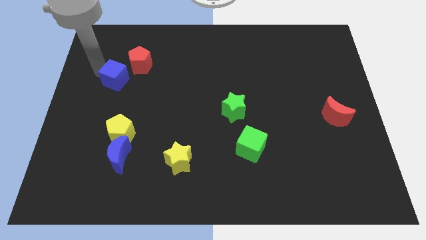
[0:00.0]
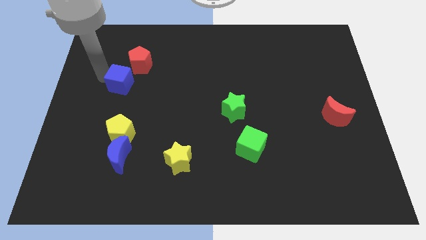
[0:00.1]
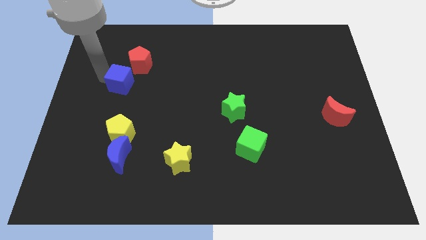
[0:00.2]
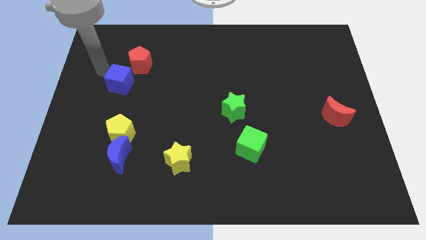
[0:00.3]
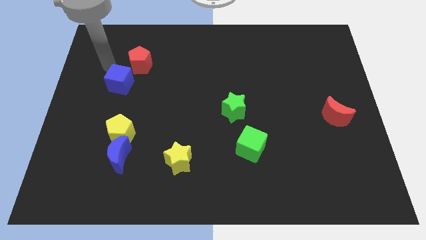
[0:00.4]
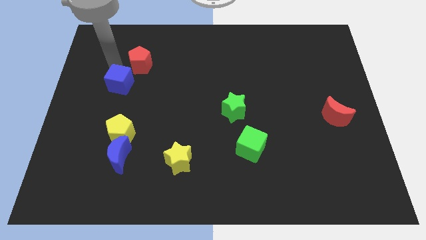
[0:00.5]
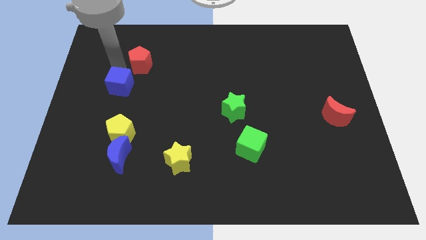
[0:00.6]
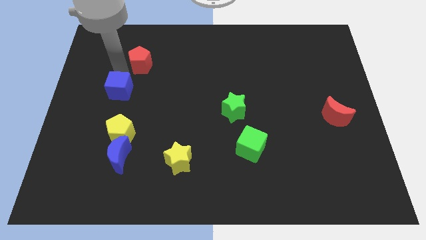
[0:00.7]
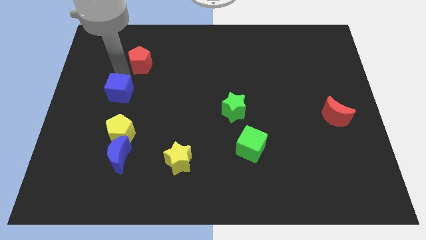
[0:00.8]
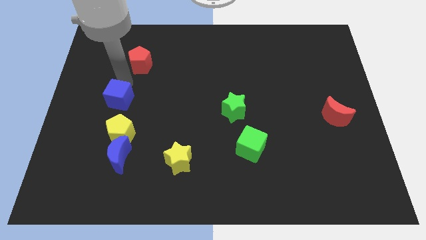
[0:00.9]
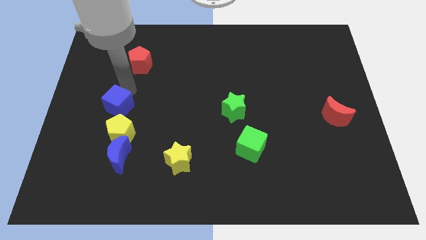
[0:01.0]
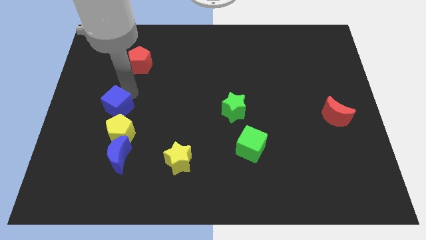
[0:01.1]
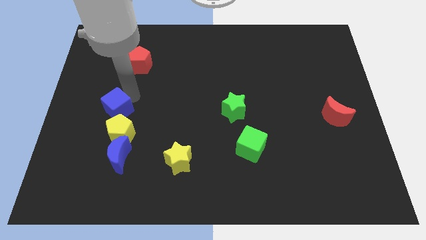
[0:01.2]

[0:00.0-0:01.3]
move the blue cube into the yellow pentagon

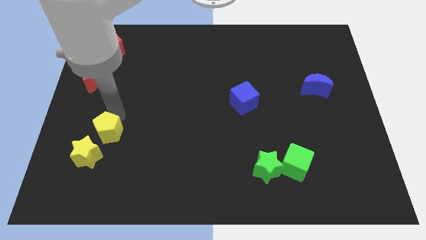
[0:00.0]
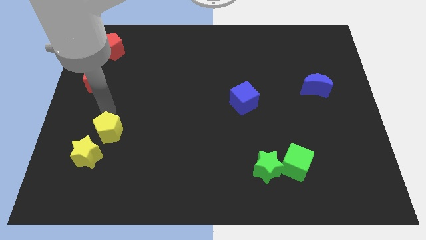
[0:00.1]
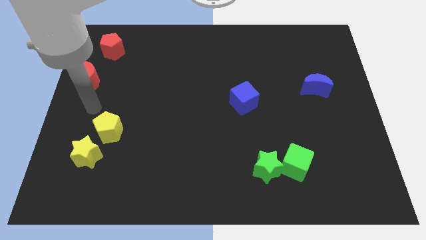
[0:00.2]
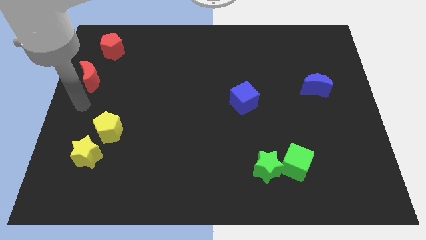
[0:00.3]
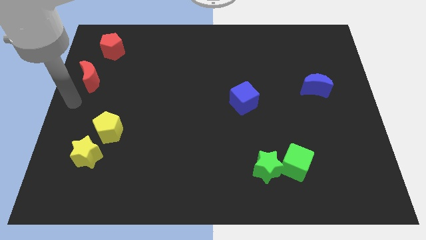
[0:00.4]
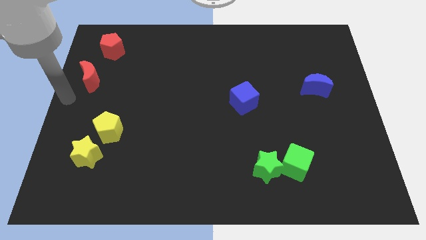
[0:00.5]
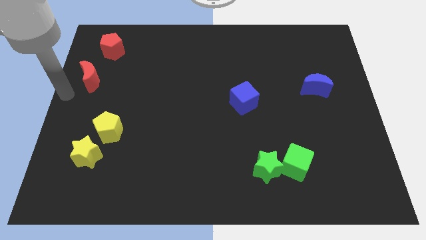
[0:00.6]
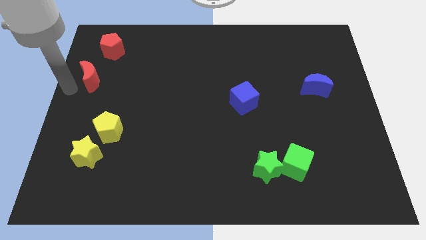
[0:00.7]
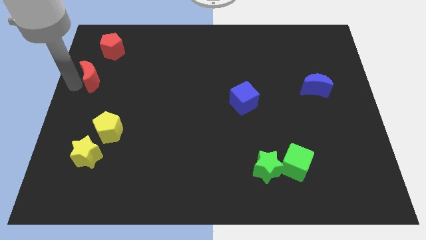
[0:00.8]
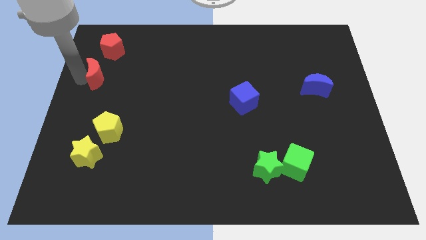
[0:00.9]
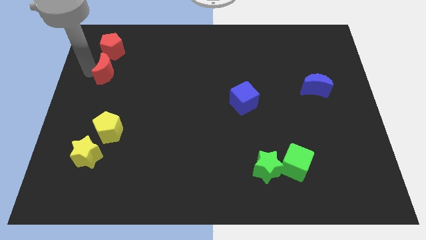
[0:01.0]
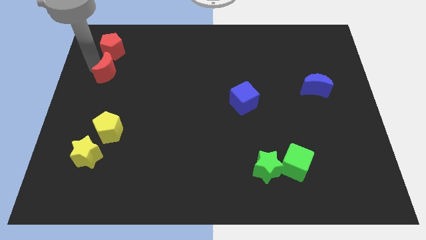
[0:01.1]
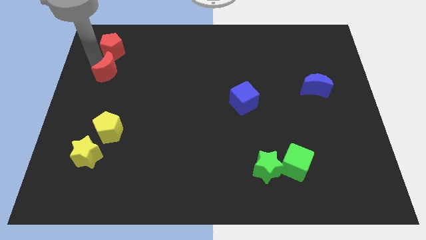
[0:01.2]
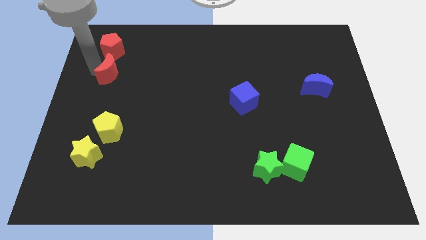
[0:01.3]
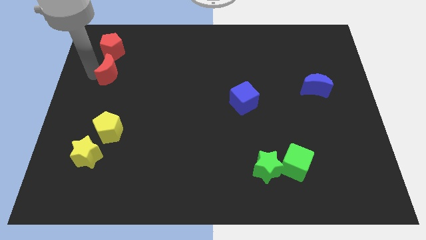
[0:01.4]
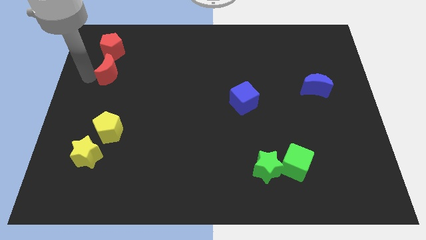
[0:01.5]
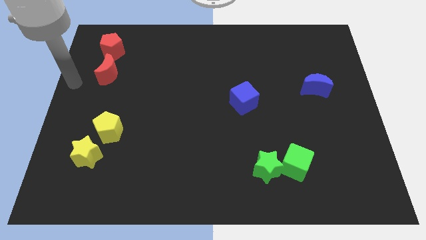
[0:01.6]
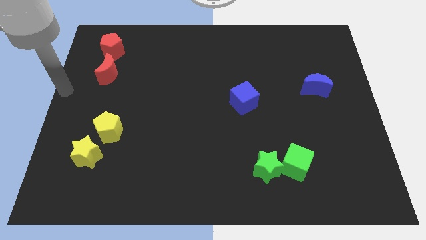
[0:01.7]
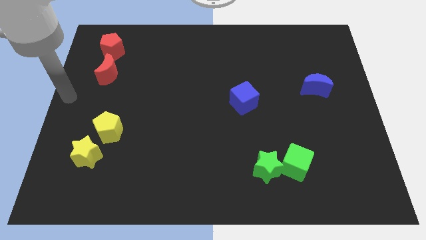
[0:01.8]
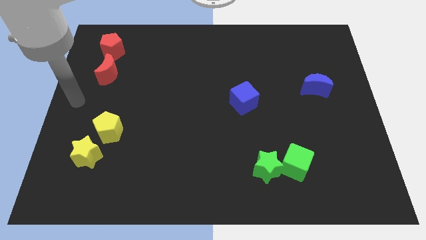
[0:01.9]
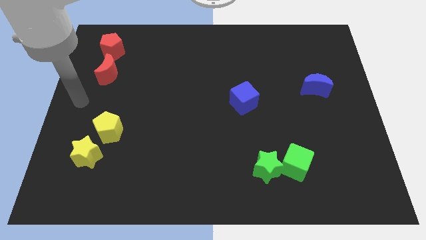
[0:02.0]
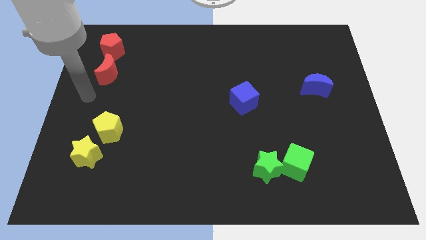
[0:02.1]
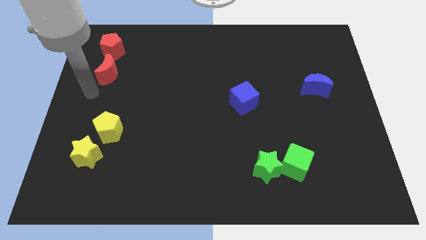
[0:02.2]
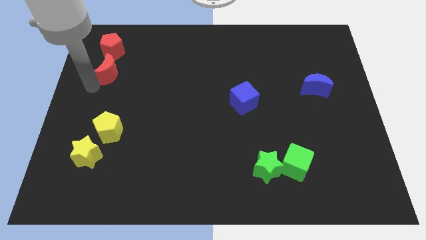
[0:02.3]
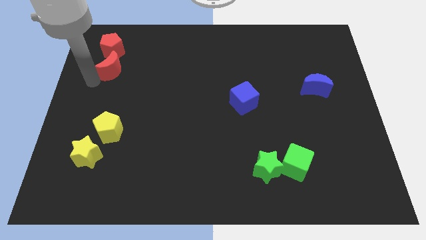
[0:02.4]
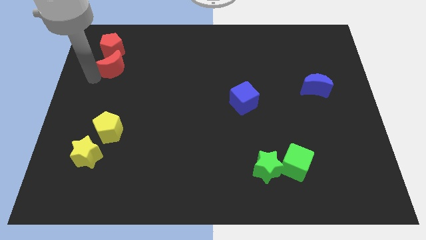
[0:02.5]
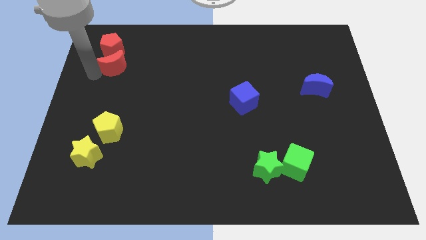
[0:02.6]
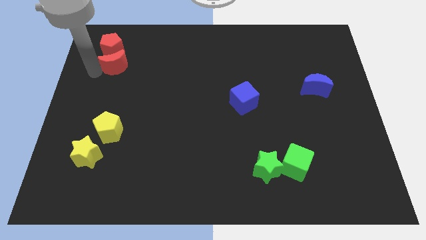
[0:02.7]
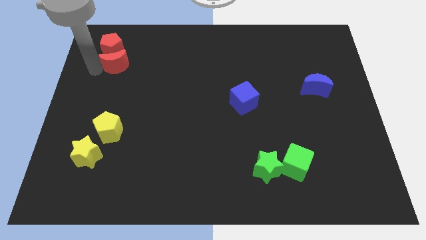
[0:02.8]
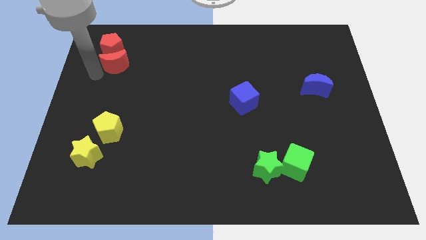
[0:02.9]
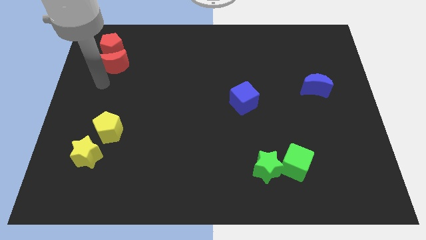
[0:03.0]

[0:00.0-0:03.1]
group up the red blocks at the top left of the table

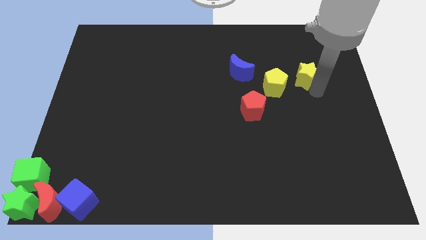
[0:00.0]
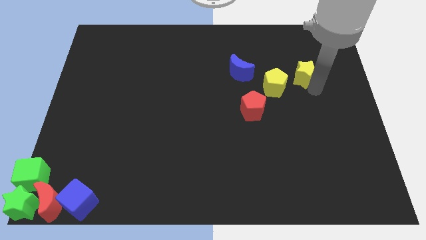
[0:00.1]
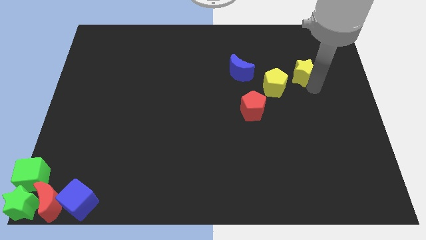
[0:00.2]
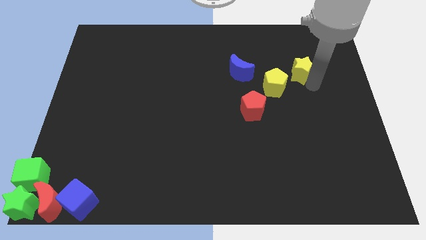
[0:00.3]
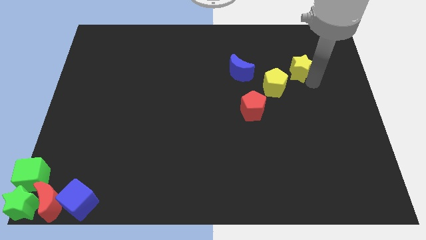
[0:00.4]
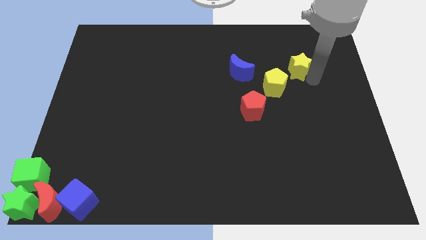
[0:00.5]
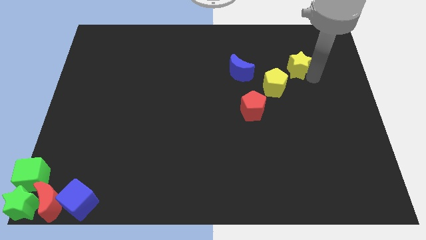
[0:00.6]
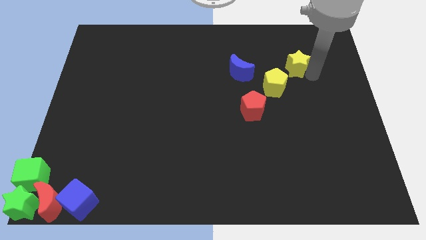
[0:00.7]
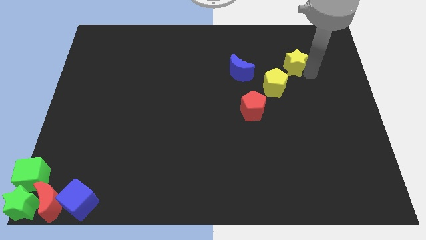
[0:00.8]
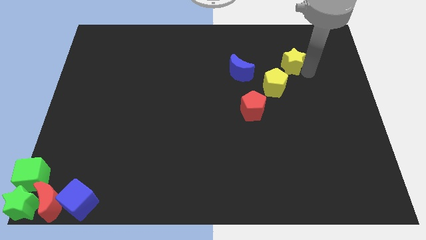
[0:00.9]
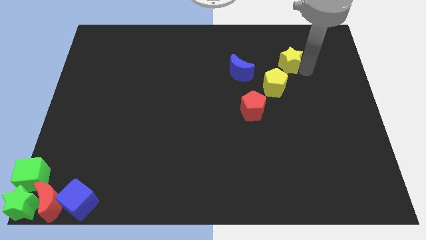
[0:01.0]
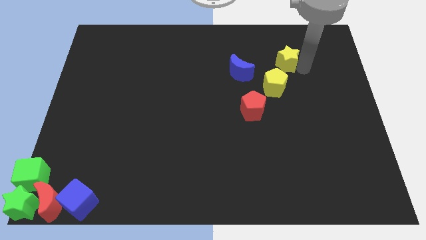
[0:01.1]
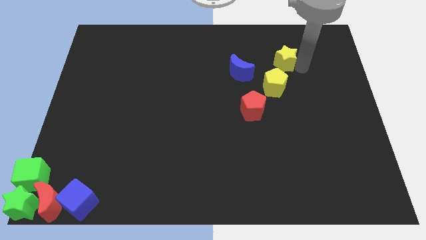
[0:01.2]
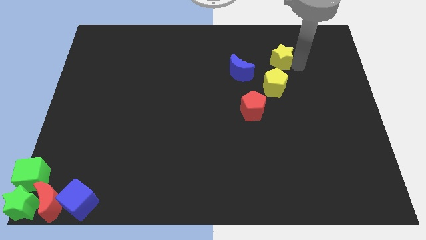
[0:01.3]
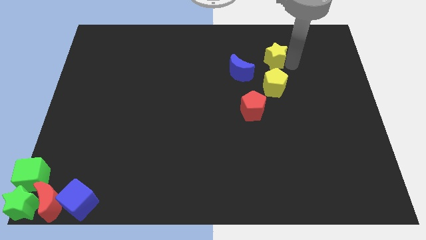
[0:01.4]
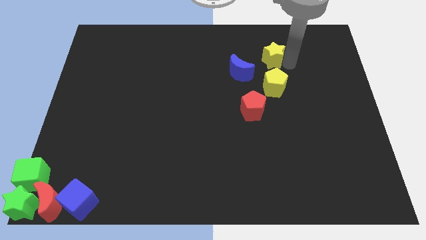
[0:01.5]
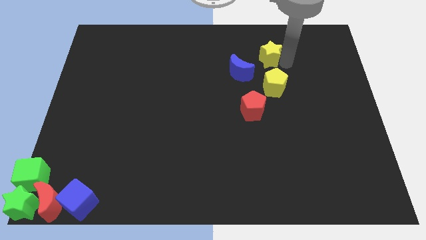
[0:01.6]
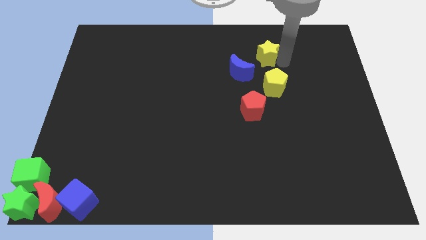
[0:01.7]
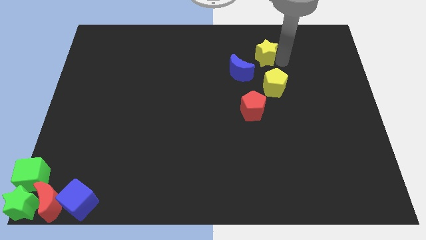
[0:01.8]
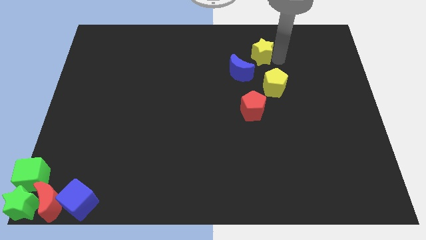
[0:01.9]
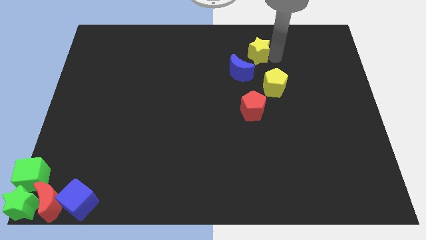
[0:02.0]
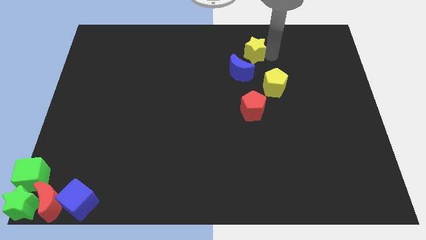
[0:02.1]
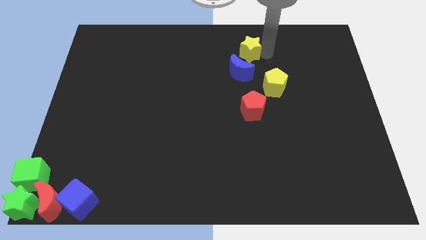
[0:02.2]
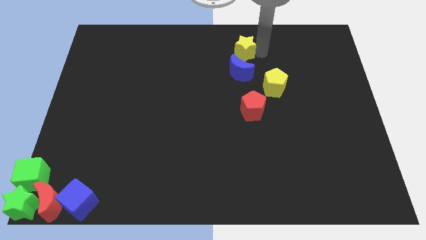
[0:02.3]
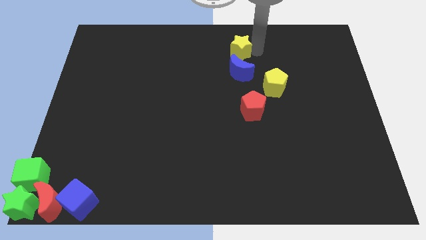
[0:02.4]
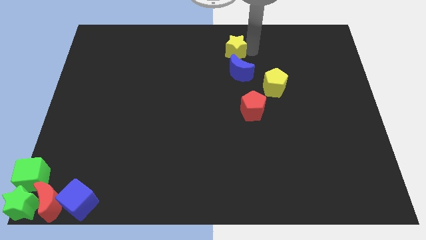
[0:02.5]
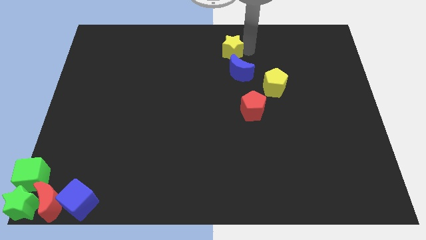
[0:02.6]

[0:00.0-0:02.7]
push the yellow star to the top of the blue crescent

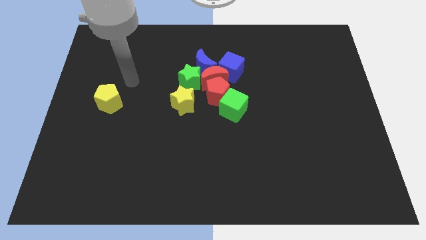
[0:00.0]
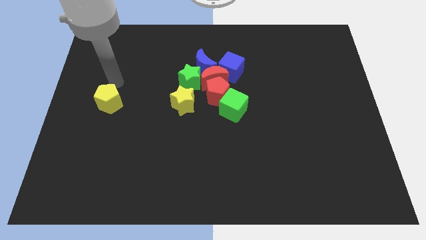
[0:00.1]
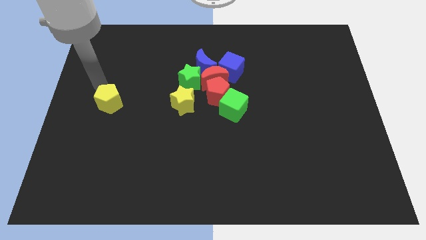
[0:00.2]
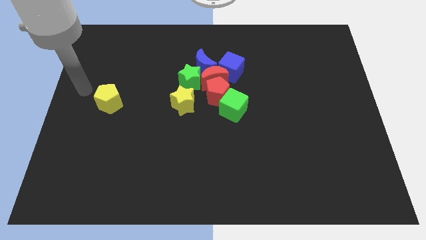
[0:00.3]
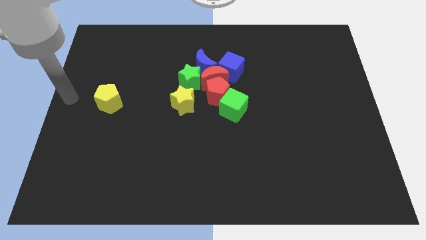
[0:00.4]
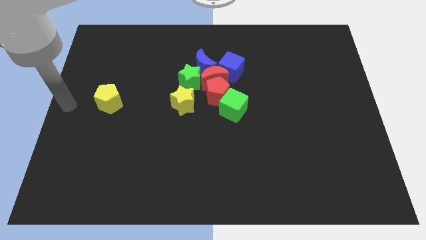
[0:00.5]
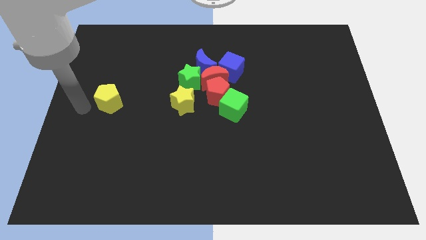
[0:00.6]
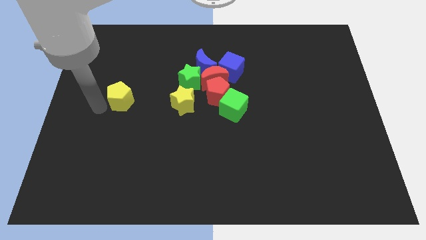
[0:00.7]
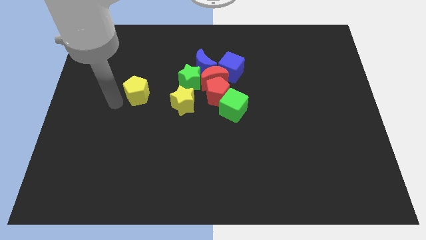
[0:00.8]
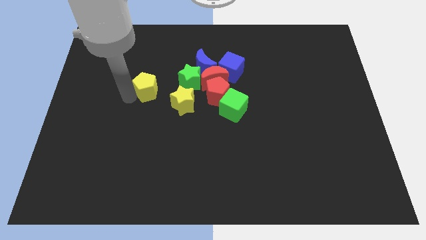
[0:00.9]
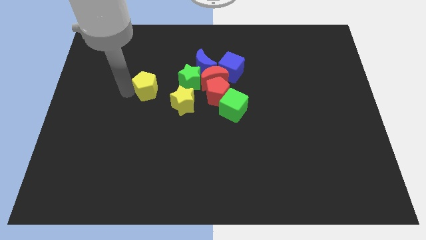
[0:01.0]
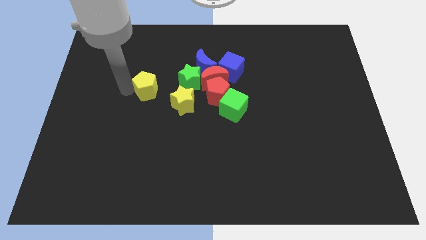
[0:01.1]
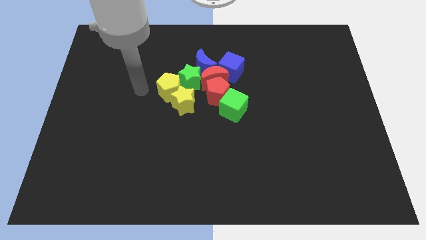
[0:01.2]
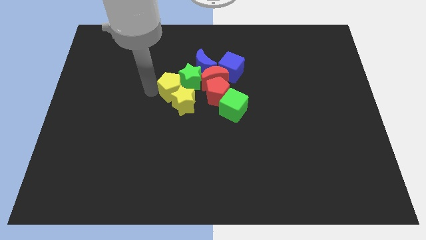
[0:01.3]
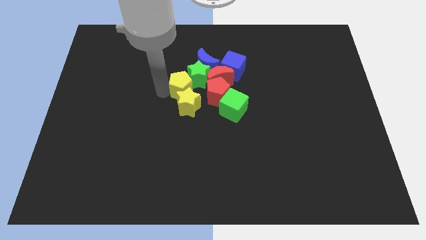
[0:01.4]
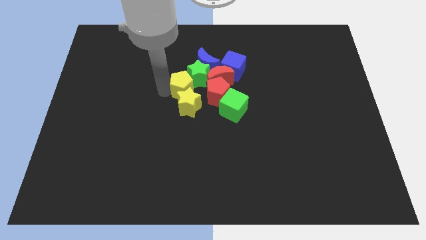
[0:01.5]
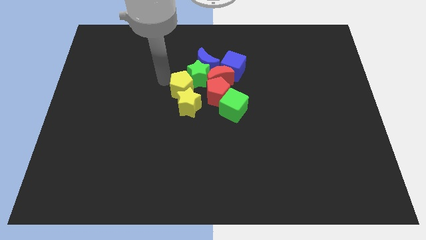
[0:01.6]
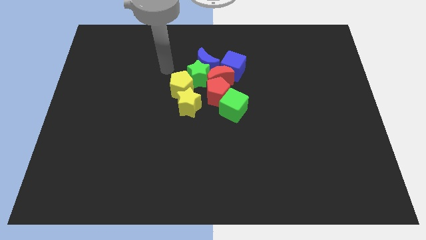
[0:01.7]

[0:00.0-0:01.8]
push the yellow pentagon into the green star and yellow star

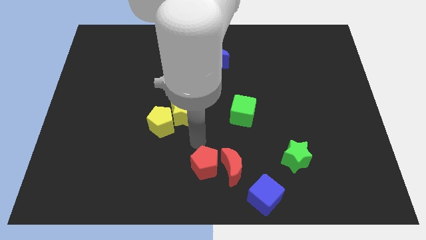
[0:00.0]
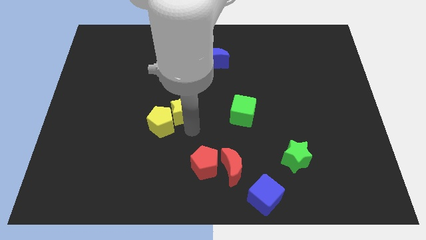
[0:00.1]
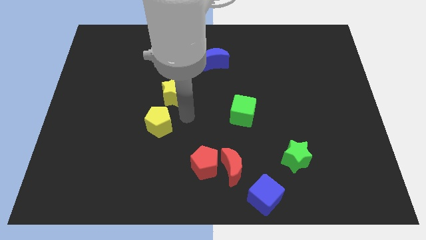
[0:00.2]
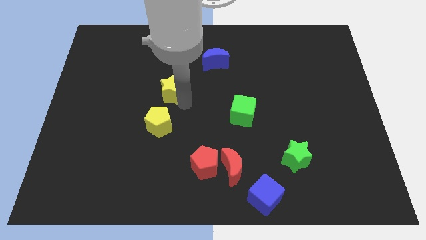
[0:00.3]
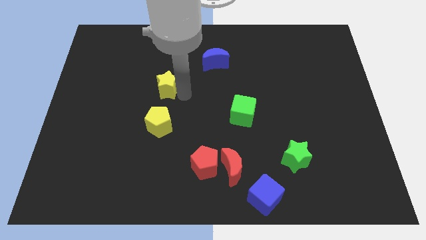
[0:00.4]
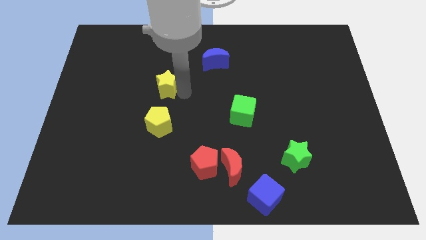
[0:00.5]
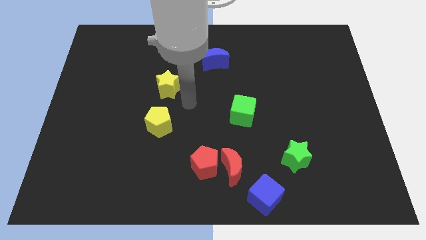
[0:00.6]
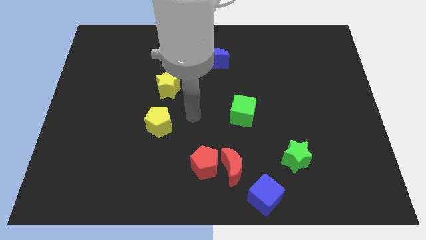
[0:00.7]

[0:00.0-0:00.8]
place yellow star above yellow pentagon
